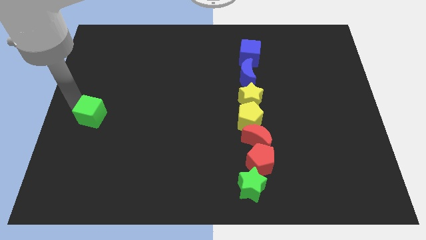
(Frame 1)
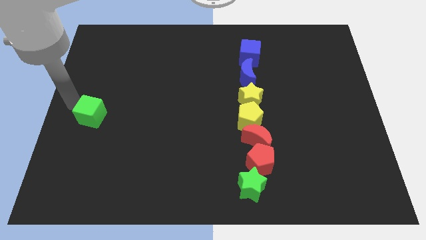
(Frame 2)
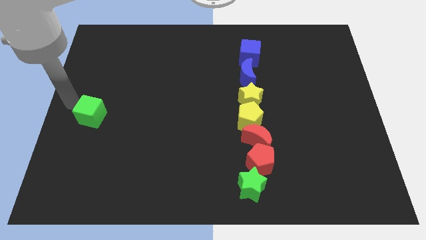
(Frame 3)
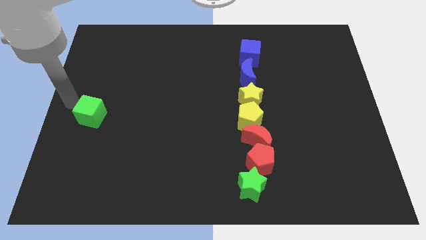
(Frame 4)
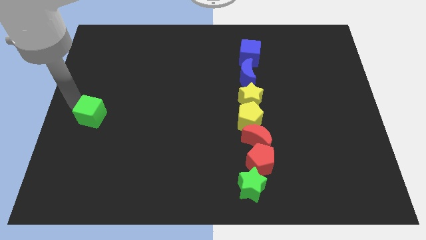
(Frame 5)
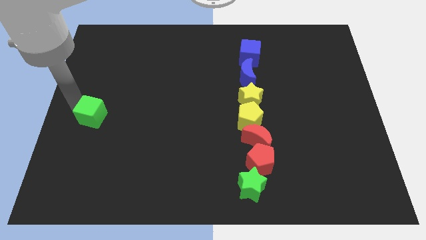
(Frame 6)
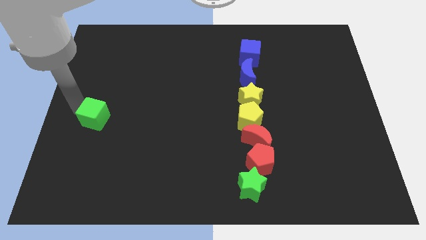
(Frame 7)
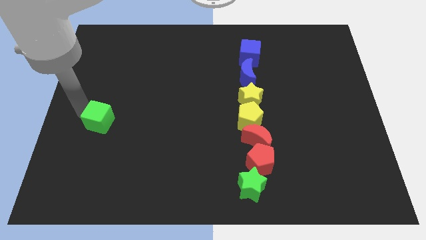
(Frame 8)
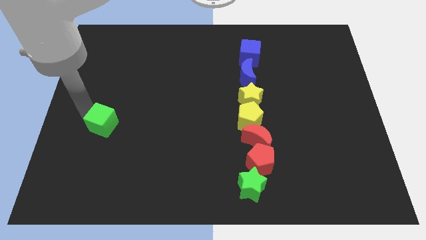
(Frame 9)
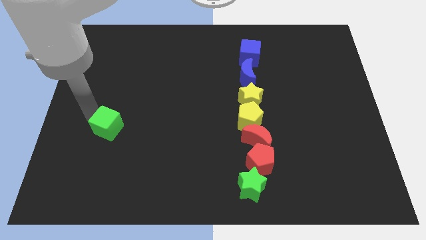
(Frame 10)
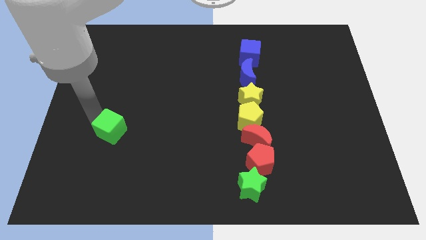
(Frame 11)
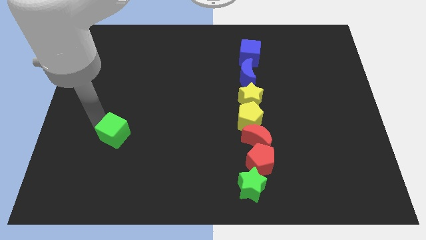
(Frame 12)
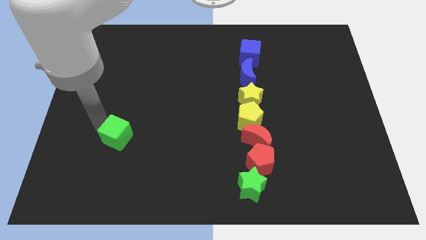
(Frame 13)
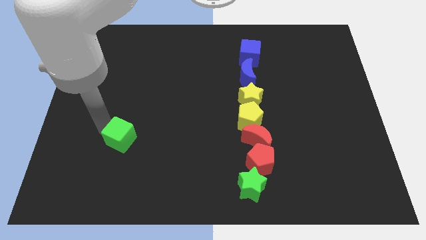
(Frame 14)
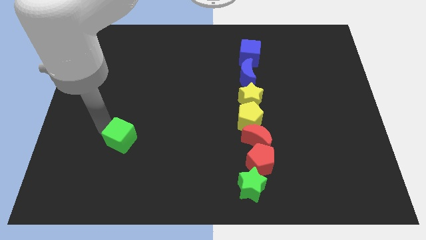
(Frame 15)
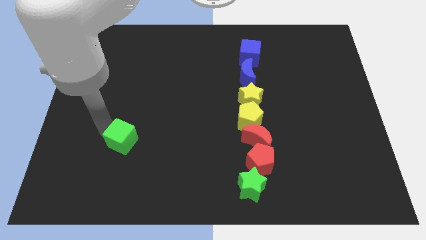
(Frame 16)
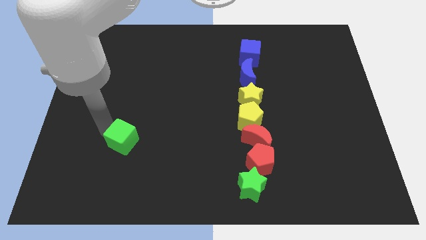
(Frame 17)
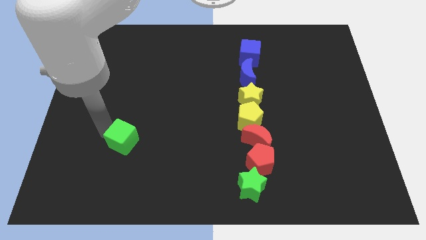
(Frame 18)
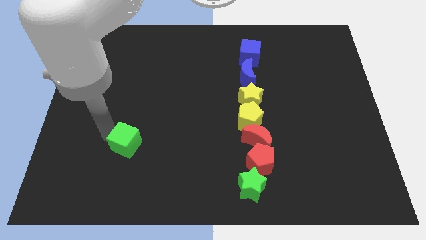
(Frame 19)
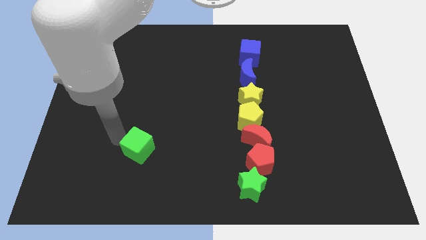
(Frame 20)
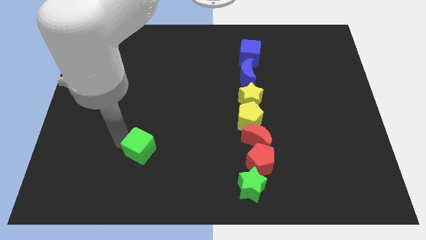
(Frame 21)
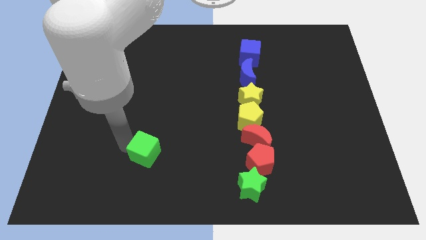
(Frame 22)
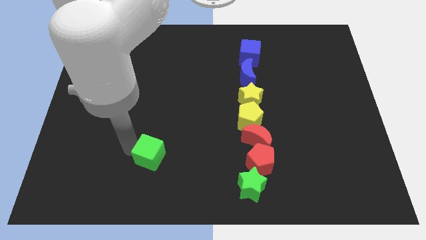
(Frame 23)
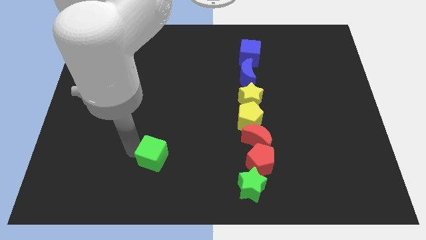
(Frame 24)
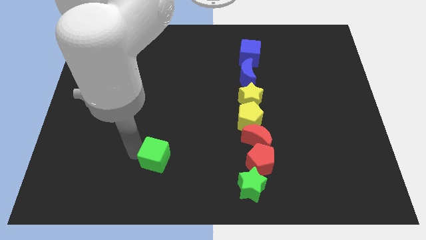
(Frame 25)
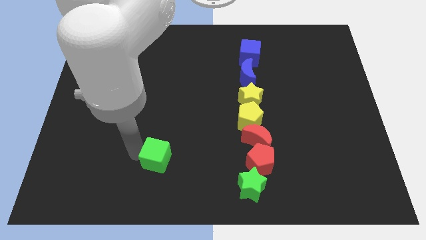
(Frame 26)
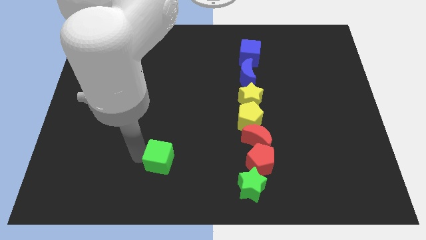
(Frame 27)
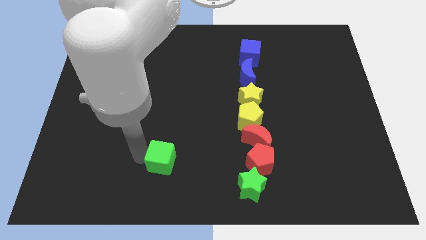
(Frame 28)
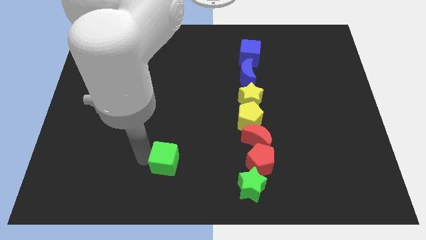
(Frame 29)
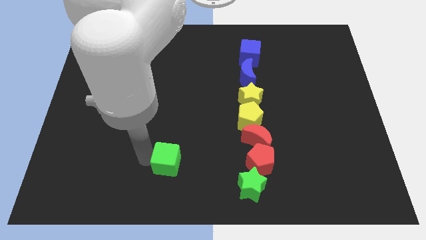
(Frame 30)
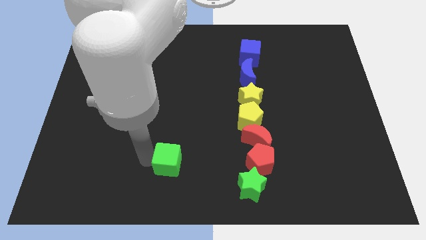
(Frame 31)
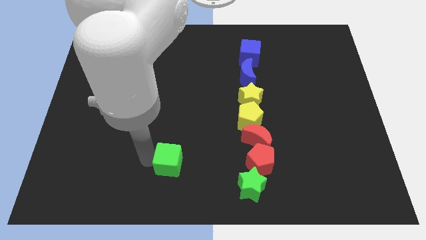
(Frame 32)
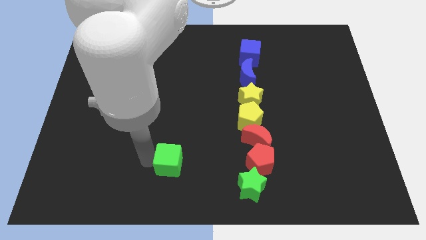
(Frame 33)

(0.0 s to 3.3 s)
move the green cube towards the line of blocks

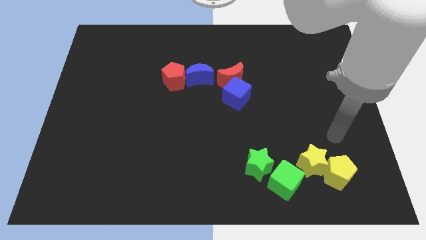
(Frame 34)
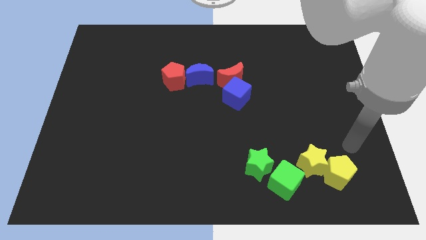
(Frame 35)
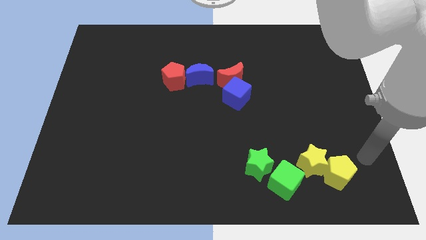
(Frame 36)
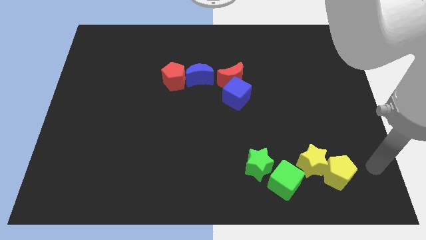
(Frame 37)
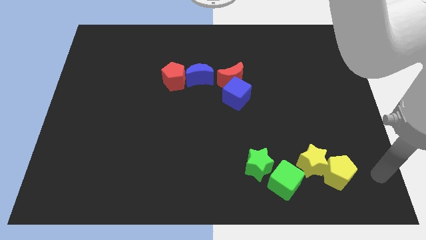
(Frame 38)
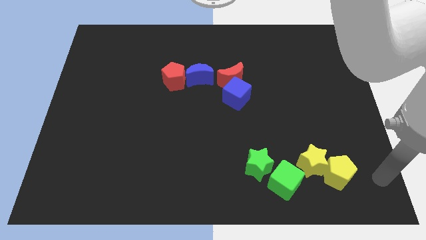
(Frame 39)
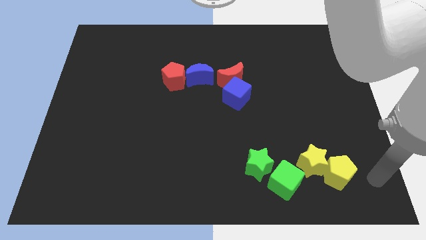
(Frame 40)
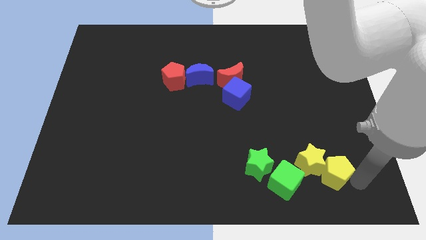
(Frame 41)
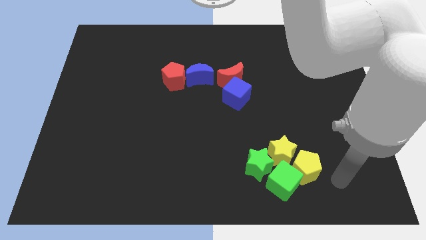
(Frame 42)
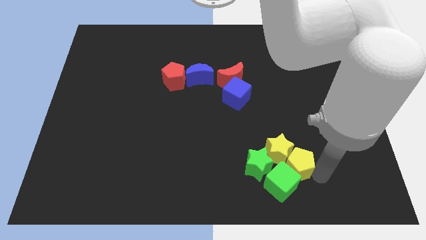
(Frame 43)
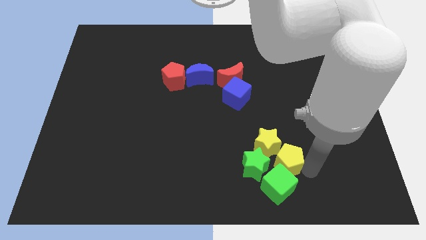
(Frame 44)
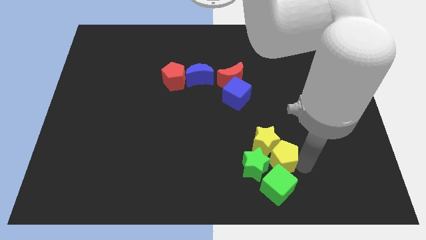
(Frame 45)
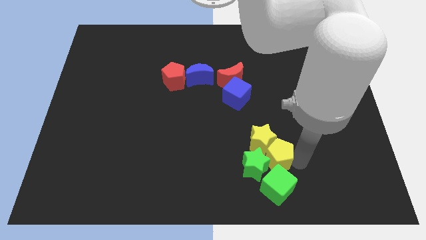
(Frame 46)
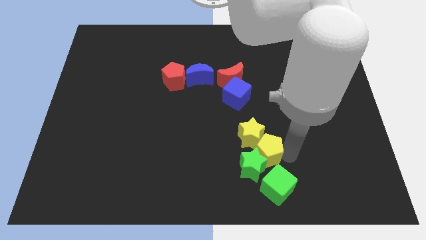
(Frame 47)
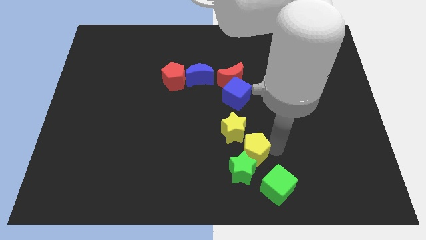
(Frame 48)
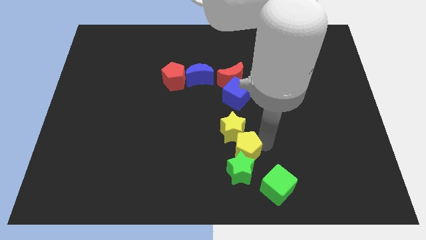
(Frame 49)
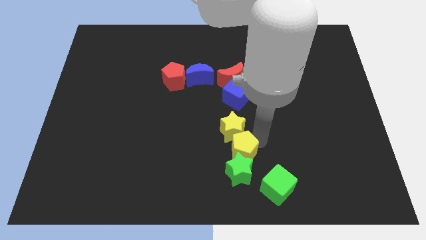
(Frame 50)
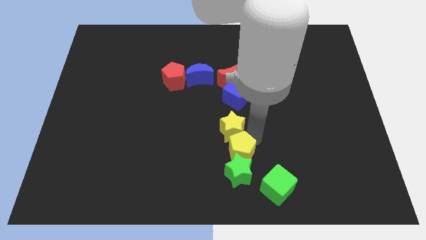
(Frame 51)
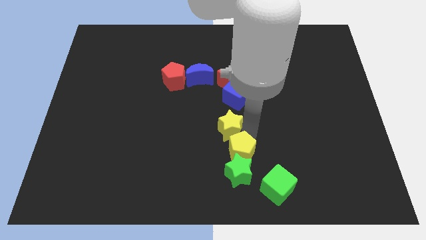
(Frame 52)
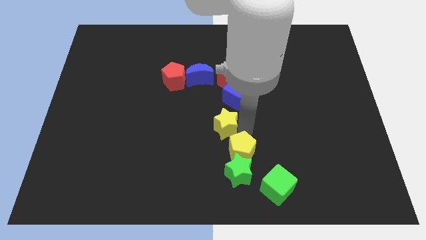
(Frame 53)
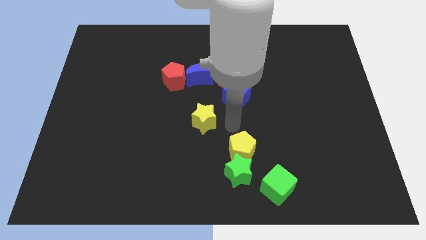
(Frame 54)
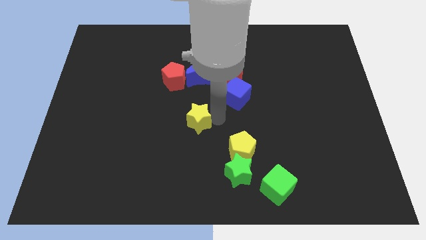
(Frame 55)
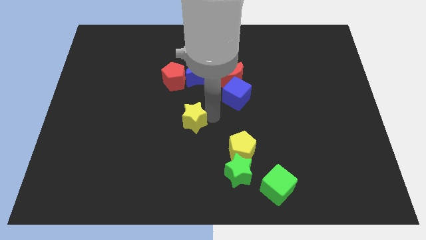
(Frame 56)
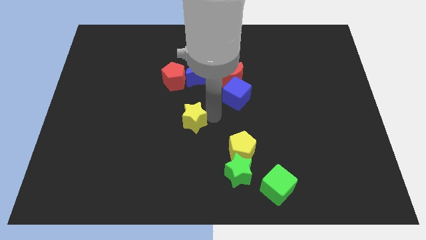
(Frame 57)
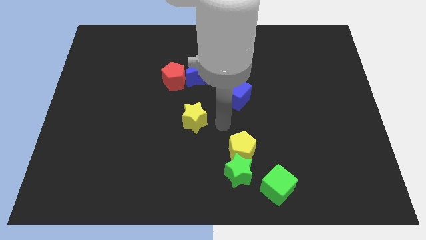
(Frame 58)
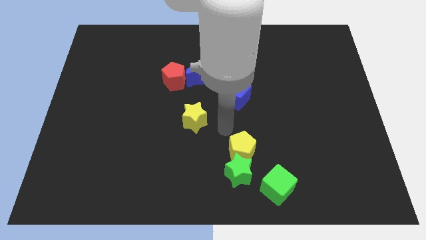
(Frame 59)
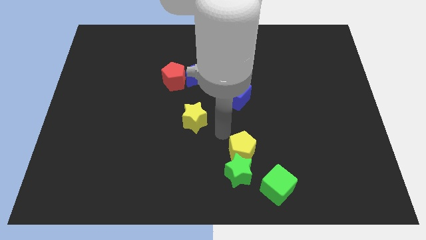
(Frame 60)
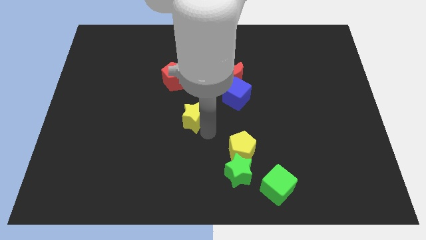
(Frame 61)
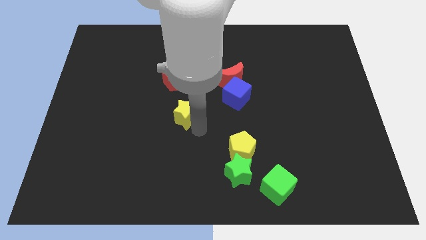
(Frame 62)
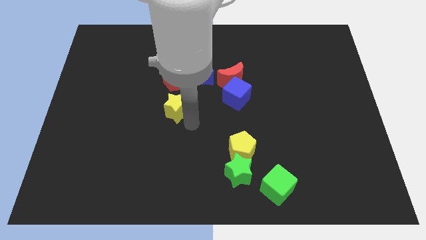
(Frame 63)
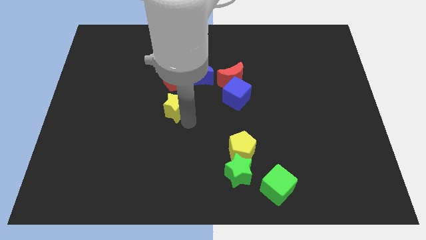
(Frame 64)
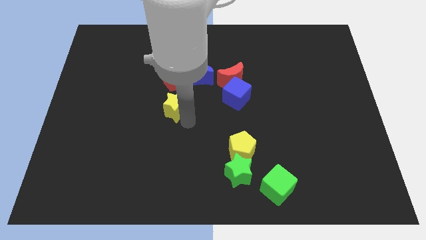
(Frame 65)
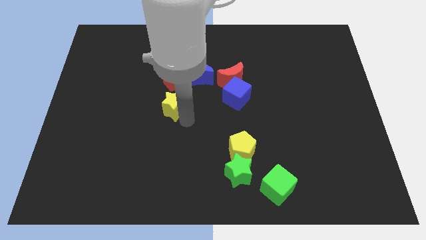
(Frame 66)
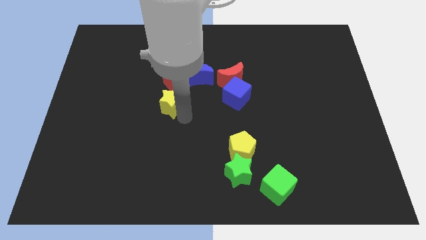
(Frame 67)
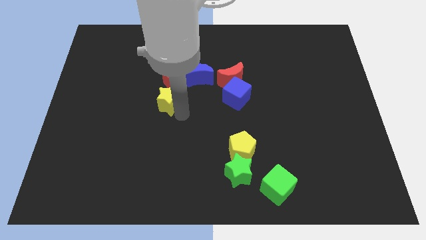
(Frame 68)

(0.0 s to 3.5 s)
move the yellow star close to the red pentagon

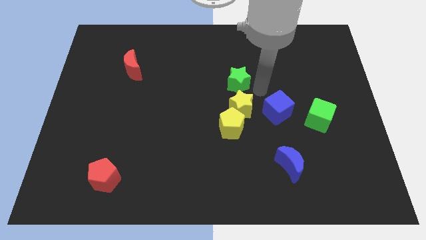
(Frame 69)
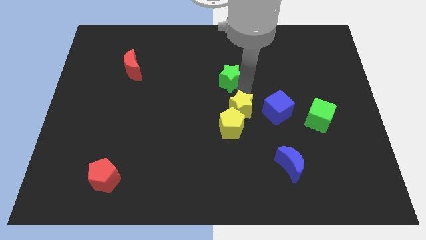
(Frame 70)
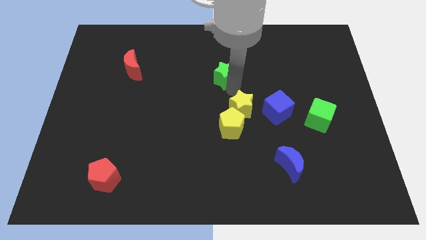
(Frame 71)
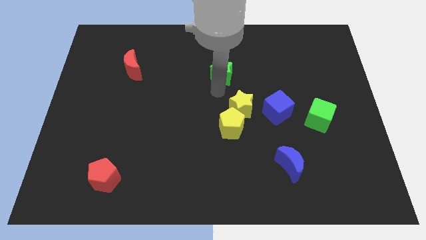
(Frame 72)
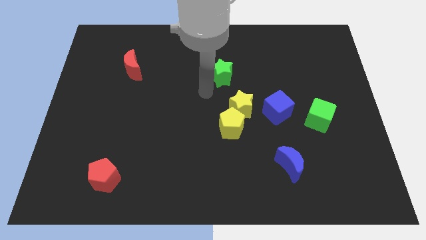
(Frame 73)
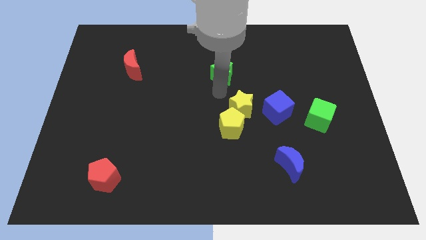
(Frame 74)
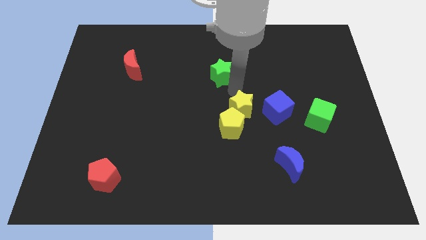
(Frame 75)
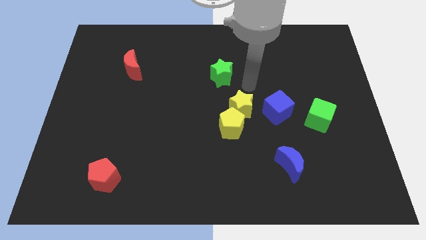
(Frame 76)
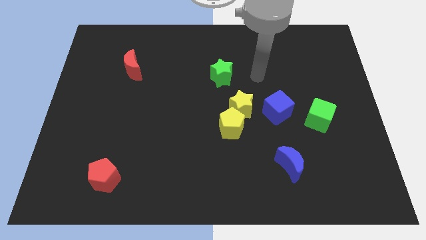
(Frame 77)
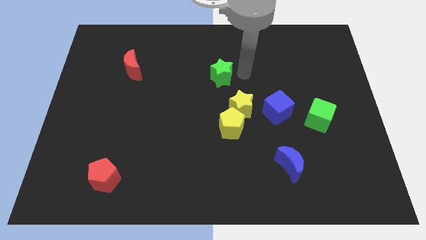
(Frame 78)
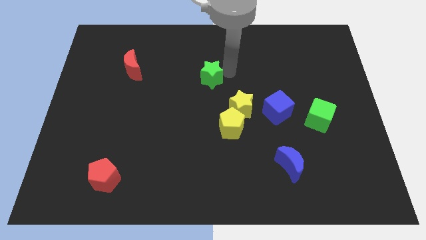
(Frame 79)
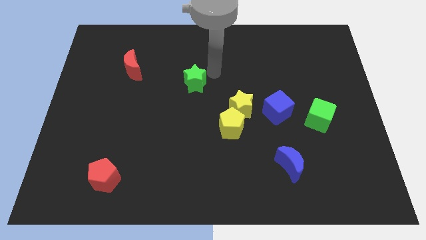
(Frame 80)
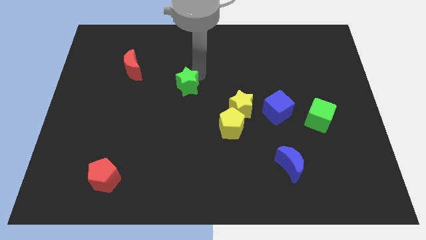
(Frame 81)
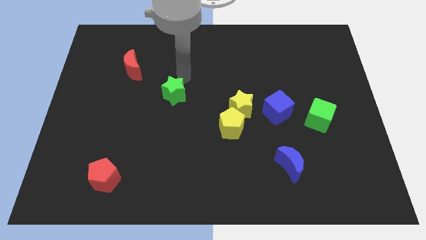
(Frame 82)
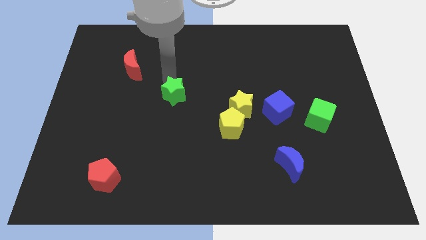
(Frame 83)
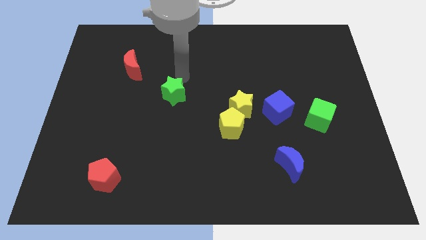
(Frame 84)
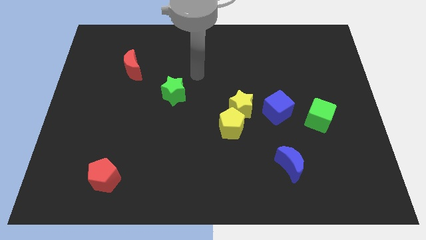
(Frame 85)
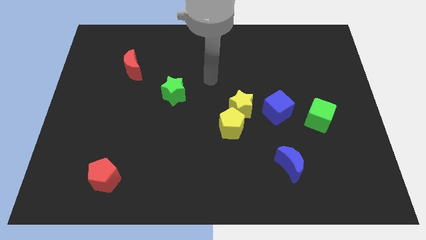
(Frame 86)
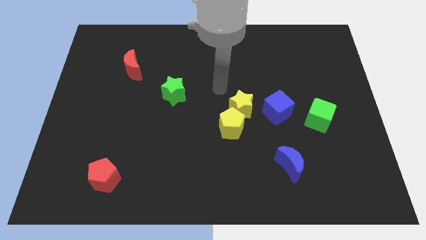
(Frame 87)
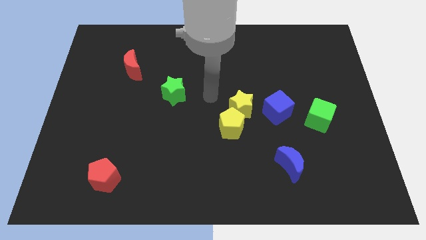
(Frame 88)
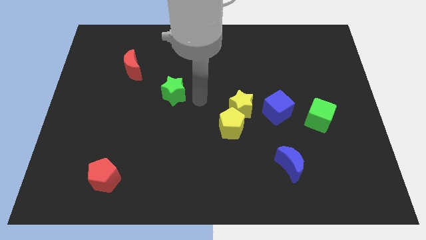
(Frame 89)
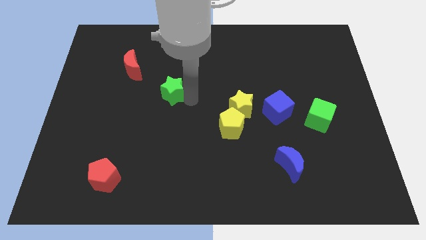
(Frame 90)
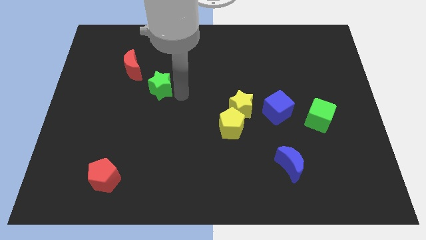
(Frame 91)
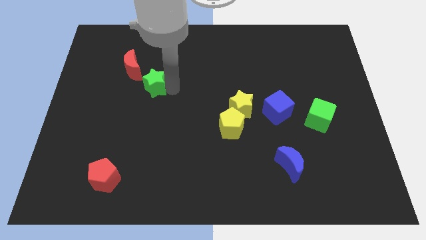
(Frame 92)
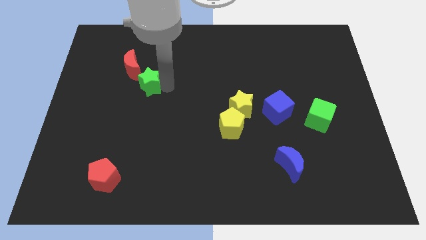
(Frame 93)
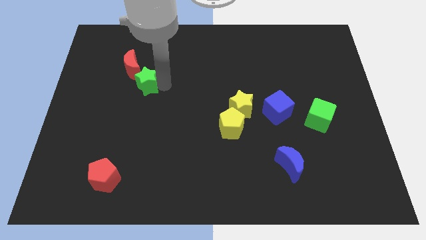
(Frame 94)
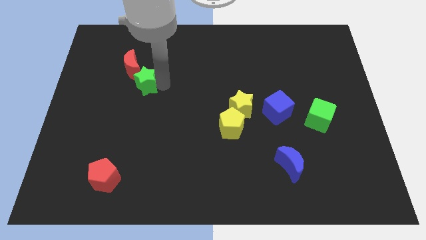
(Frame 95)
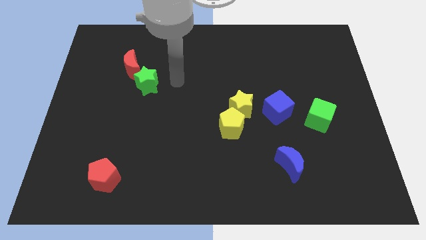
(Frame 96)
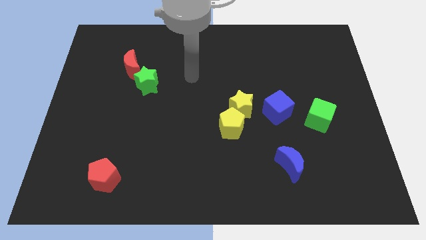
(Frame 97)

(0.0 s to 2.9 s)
push the green star below the red crescent
